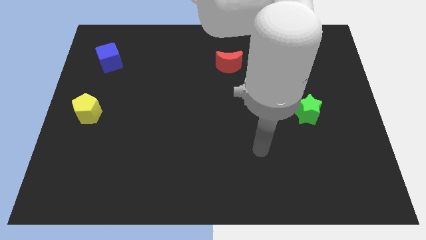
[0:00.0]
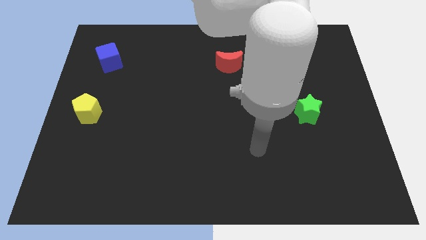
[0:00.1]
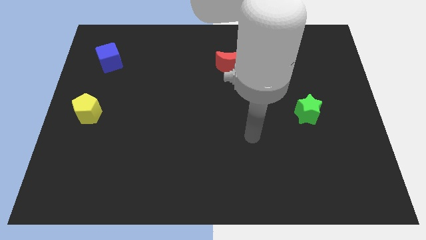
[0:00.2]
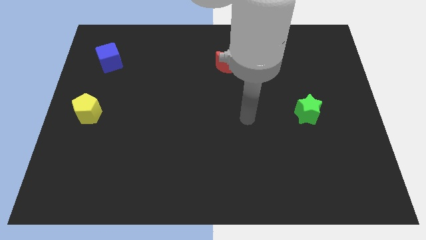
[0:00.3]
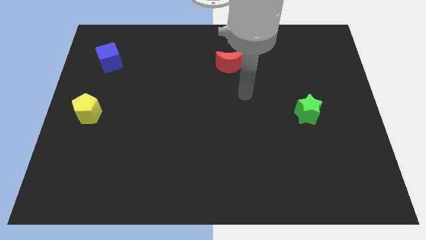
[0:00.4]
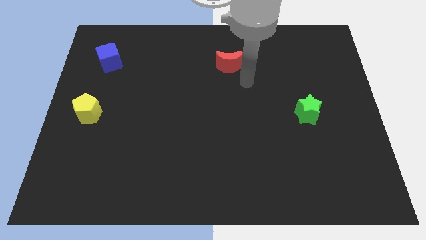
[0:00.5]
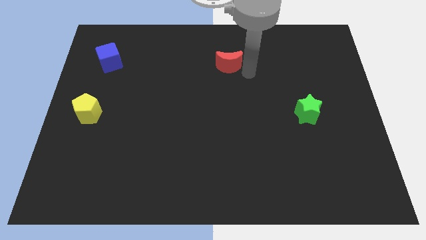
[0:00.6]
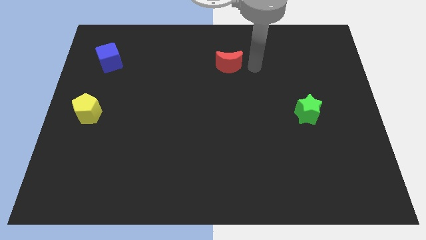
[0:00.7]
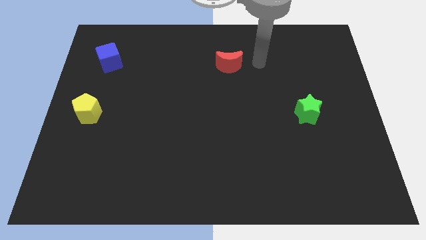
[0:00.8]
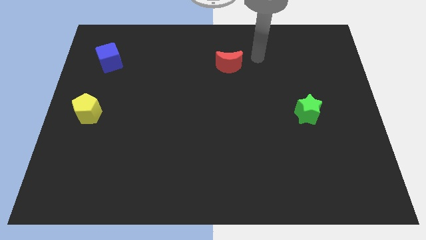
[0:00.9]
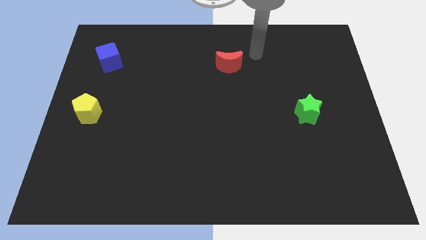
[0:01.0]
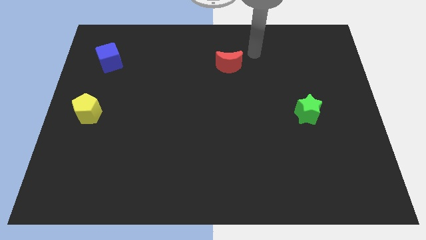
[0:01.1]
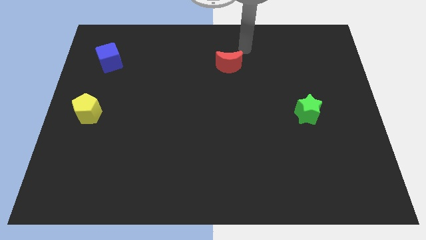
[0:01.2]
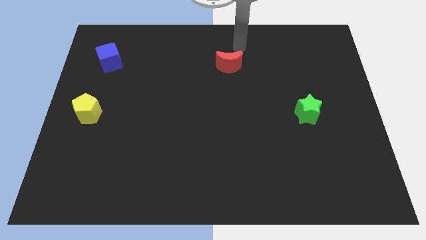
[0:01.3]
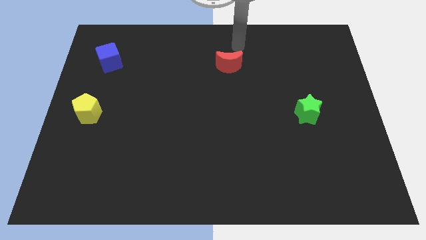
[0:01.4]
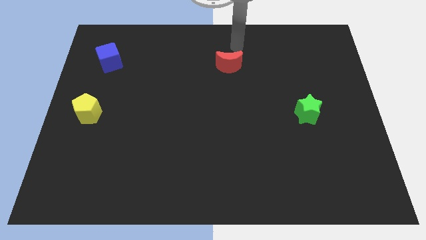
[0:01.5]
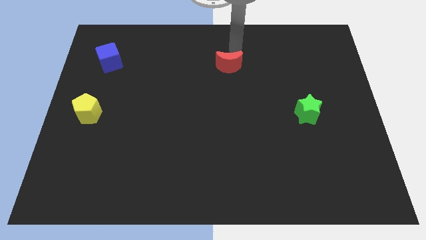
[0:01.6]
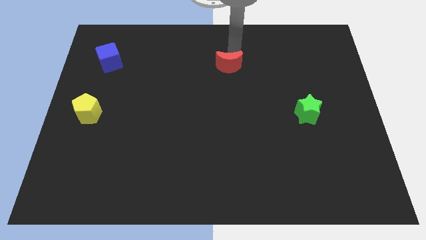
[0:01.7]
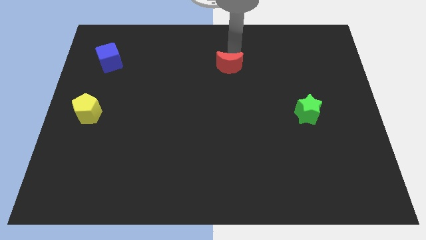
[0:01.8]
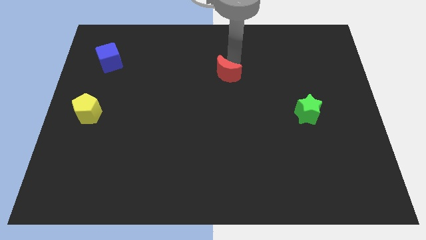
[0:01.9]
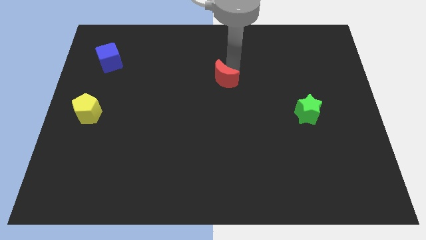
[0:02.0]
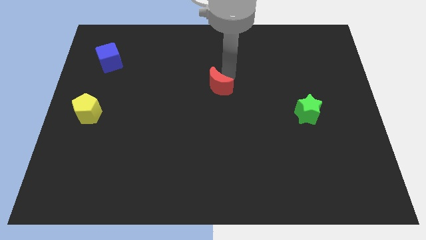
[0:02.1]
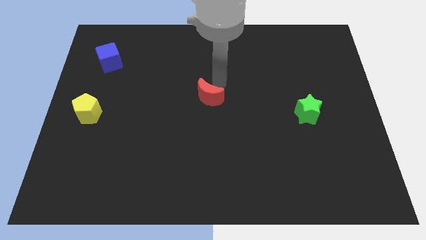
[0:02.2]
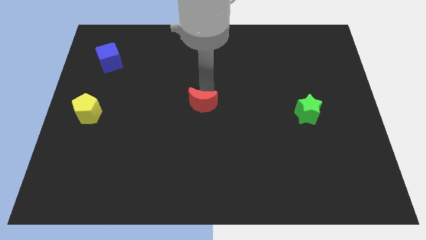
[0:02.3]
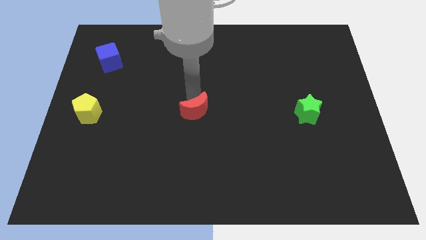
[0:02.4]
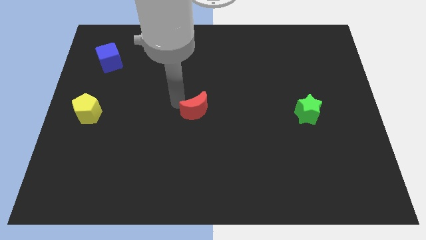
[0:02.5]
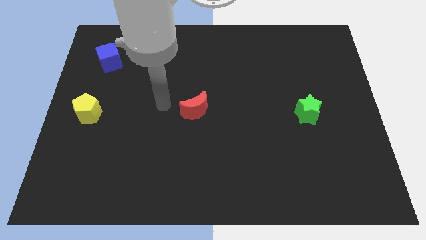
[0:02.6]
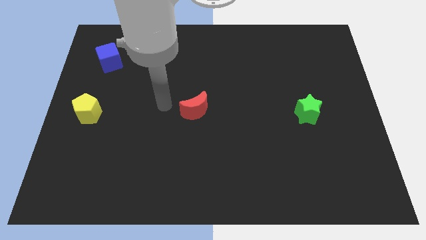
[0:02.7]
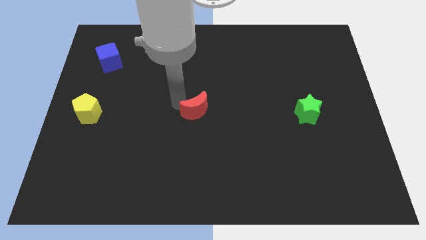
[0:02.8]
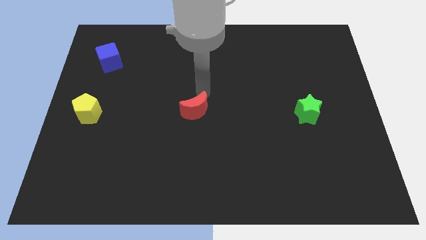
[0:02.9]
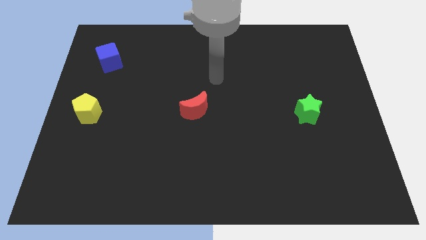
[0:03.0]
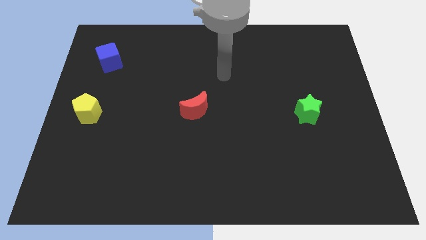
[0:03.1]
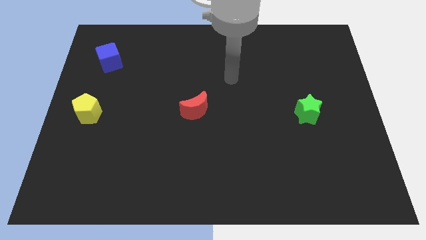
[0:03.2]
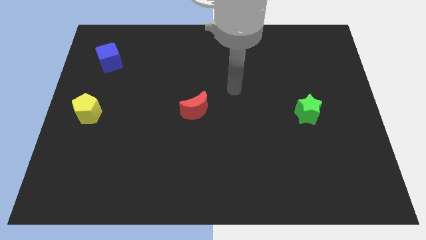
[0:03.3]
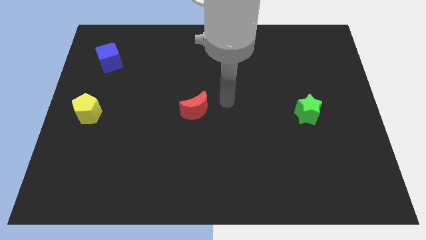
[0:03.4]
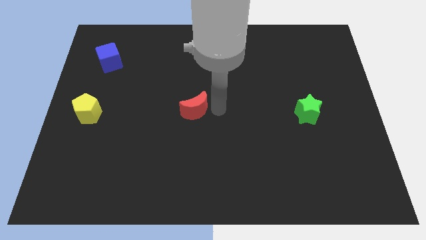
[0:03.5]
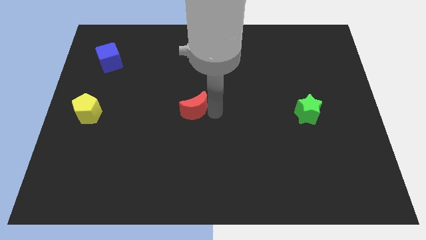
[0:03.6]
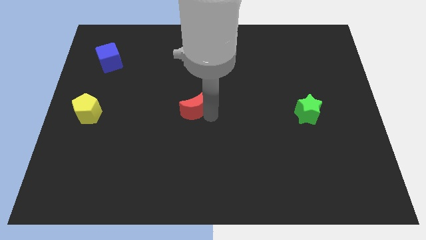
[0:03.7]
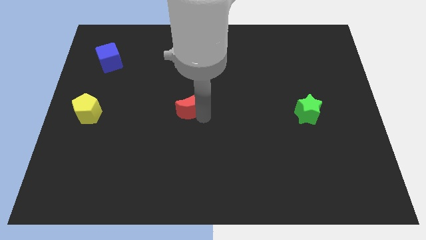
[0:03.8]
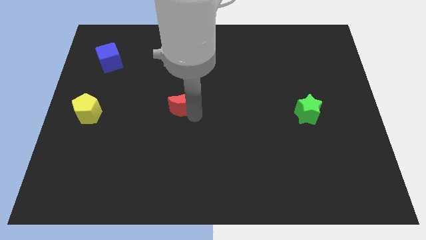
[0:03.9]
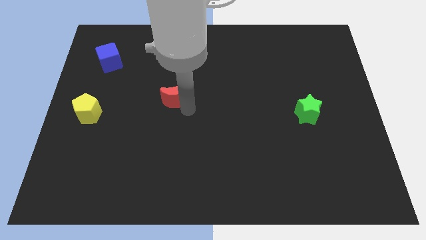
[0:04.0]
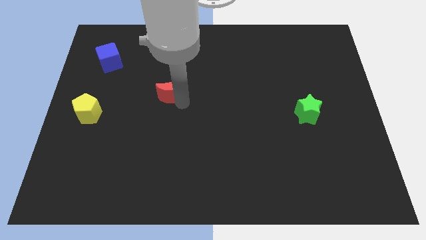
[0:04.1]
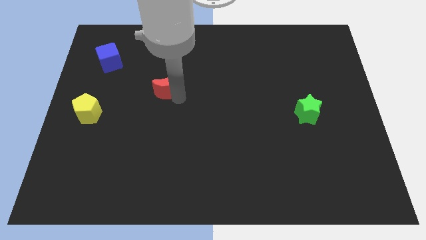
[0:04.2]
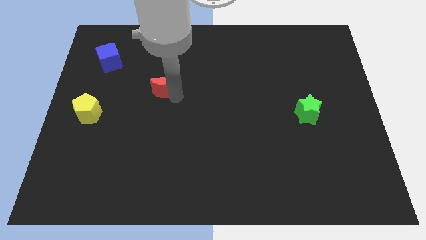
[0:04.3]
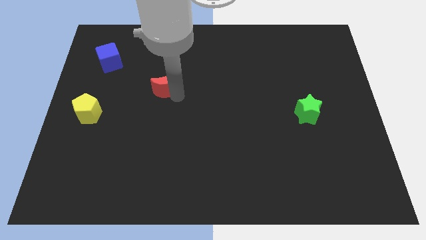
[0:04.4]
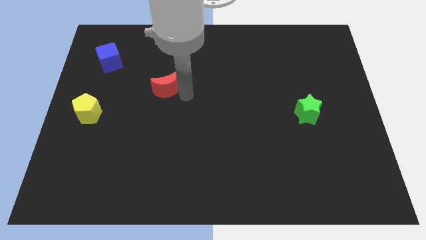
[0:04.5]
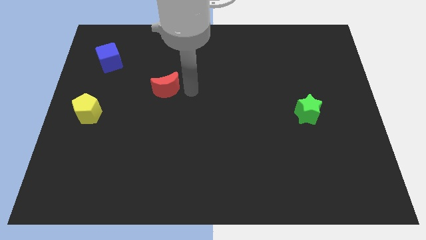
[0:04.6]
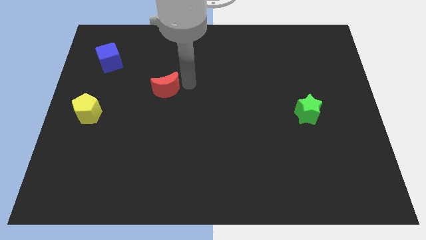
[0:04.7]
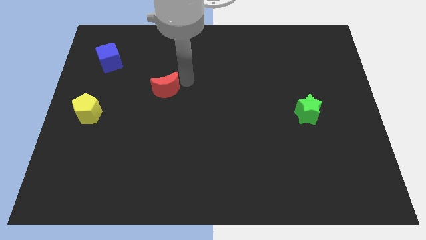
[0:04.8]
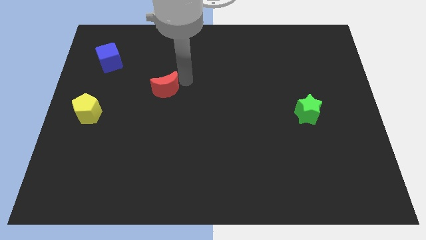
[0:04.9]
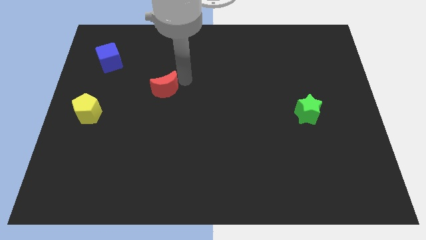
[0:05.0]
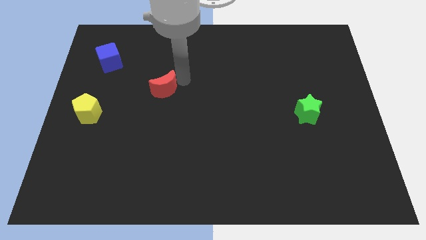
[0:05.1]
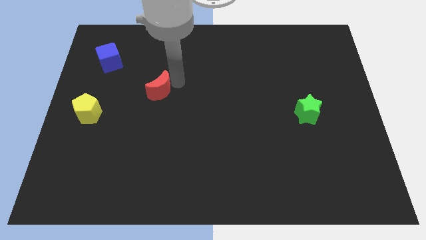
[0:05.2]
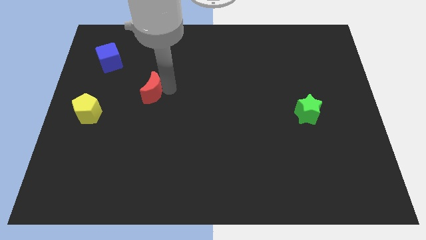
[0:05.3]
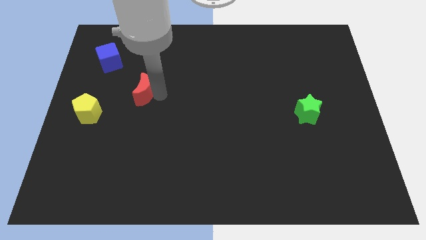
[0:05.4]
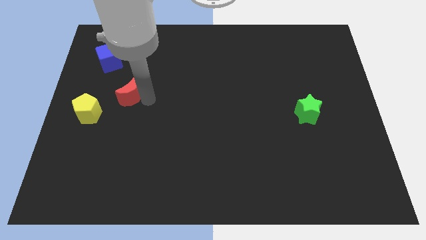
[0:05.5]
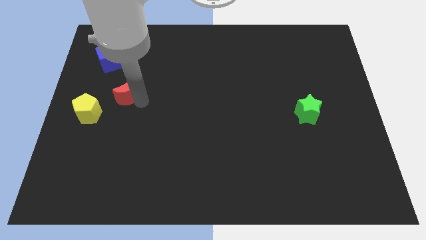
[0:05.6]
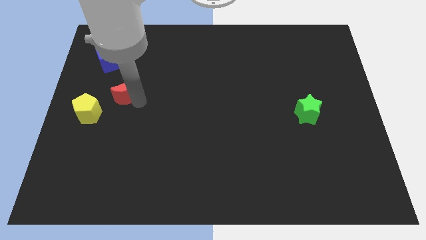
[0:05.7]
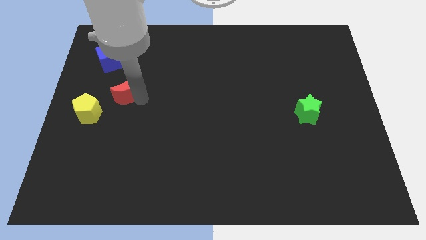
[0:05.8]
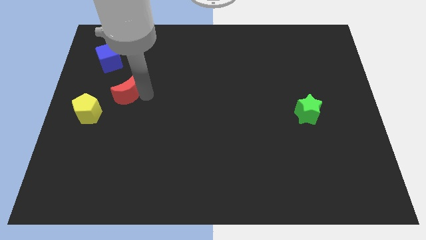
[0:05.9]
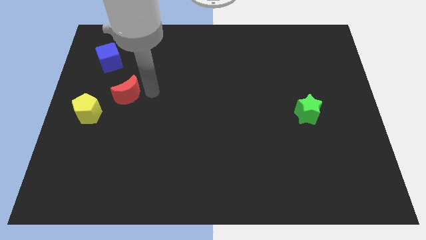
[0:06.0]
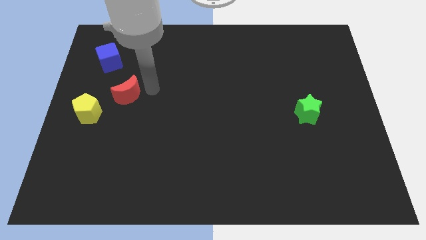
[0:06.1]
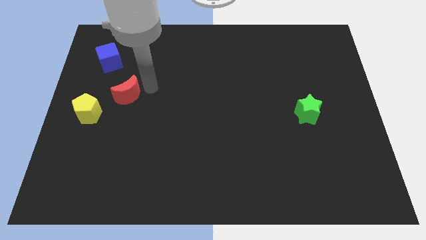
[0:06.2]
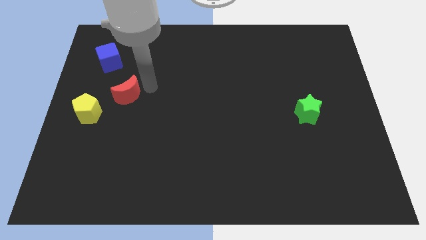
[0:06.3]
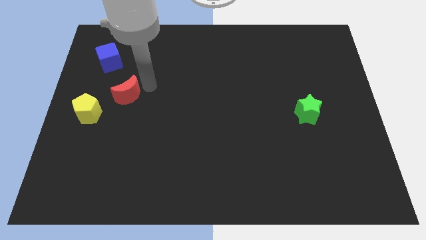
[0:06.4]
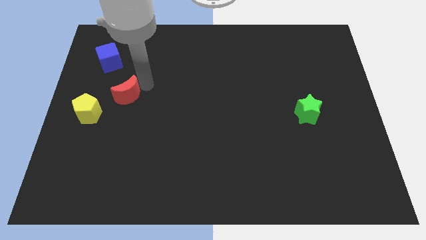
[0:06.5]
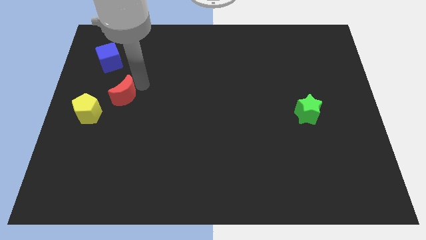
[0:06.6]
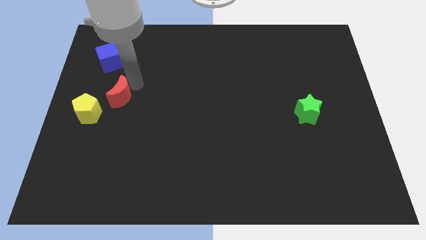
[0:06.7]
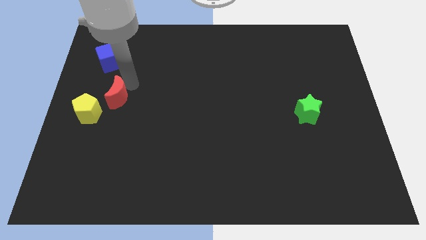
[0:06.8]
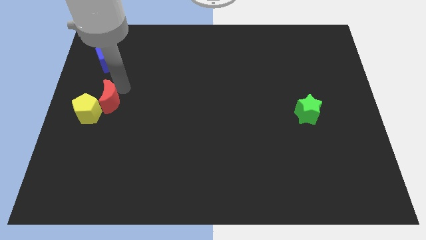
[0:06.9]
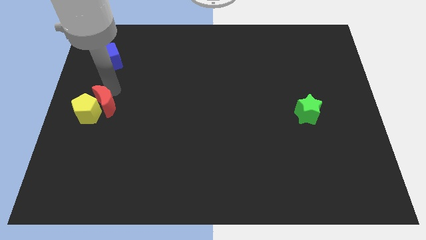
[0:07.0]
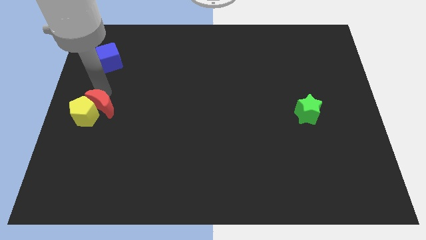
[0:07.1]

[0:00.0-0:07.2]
move the red moon close to the yellow pentagon

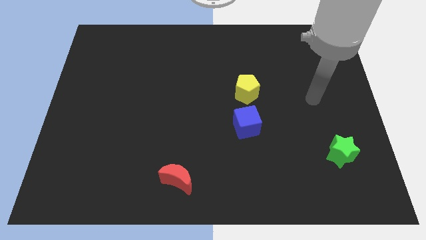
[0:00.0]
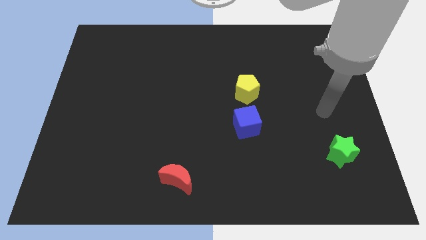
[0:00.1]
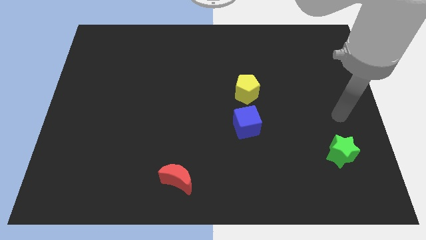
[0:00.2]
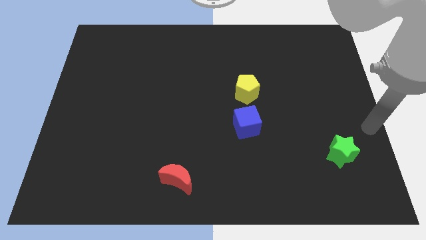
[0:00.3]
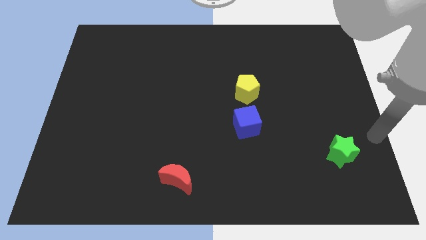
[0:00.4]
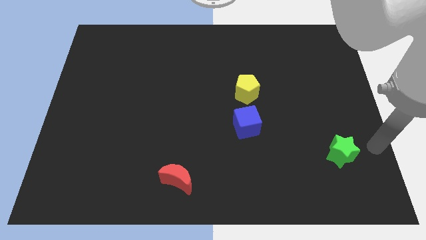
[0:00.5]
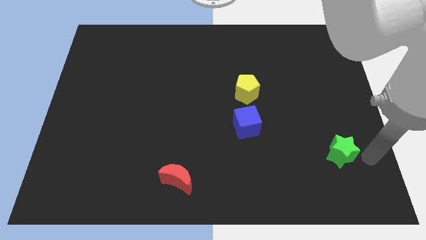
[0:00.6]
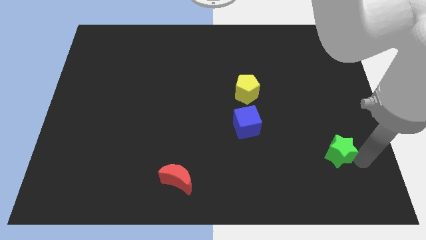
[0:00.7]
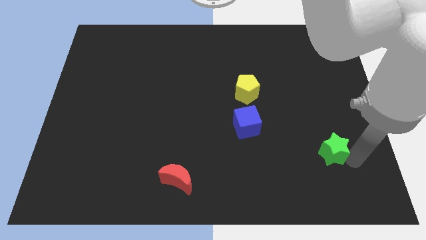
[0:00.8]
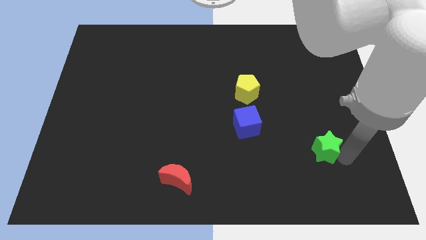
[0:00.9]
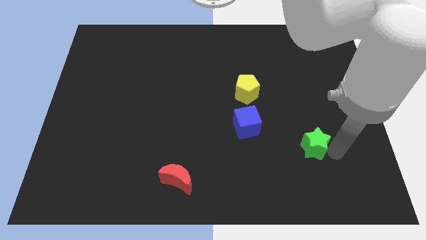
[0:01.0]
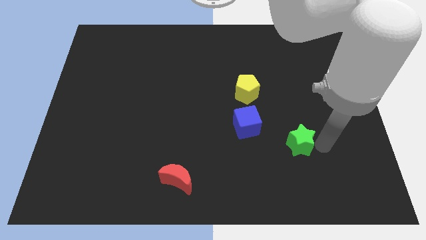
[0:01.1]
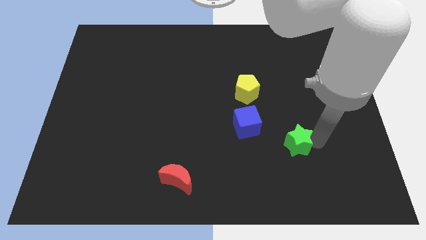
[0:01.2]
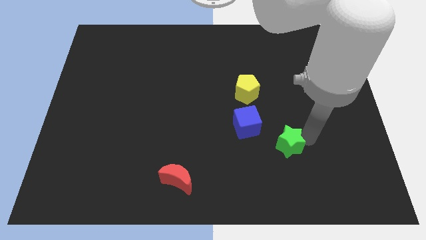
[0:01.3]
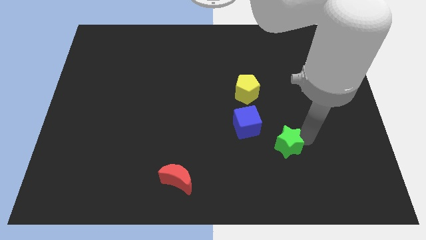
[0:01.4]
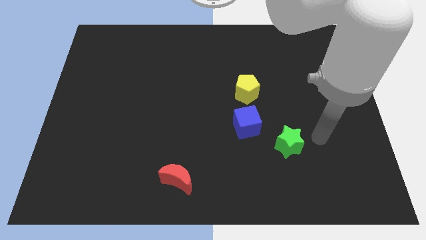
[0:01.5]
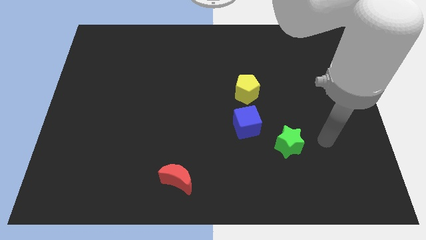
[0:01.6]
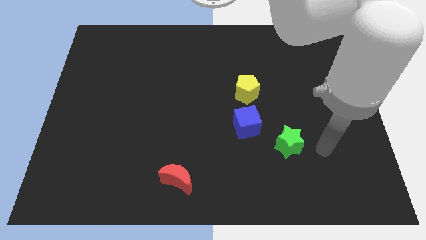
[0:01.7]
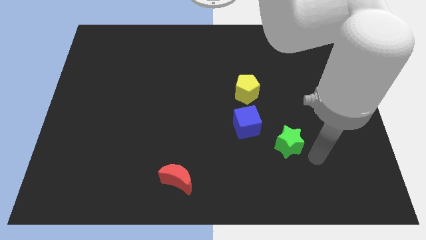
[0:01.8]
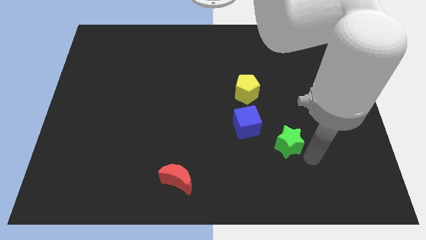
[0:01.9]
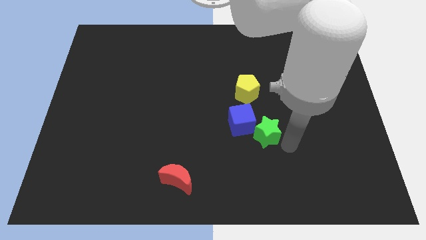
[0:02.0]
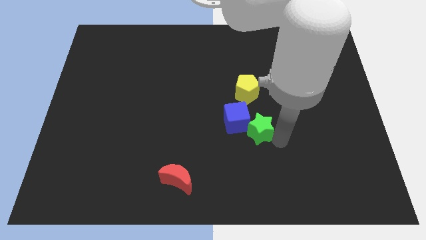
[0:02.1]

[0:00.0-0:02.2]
put the green star next to the blue block
